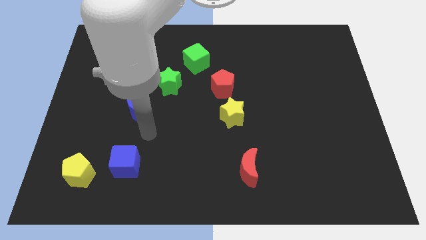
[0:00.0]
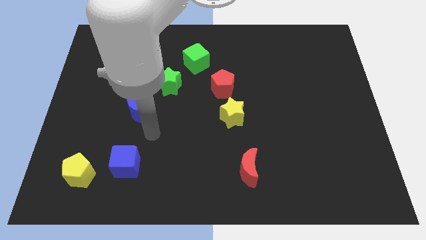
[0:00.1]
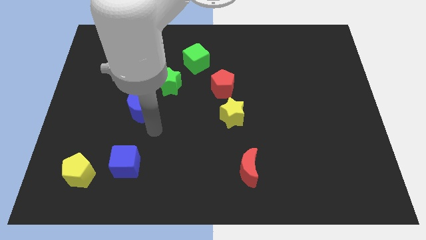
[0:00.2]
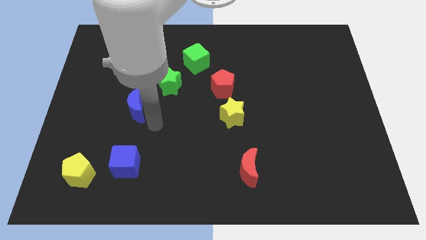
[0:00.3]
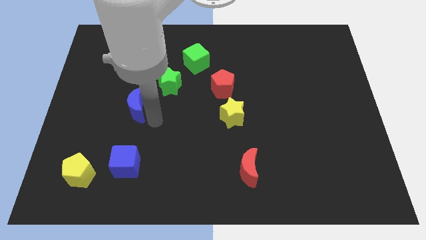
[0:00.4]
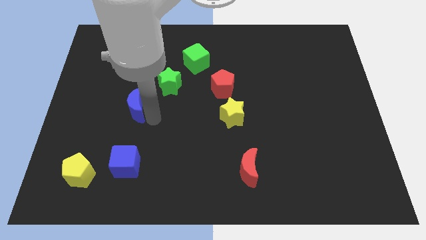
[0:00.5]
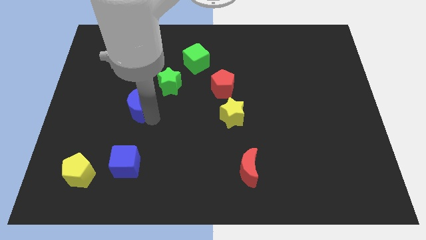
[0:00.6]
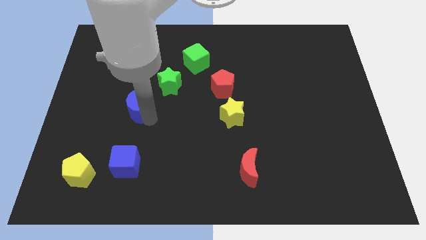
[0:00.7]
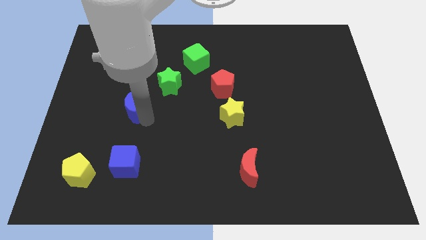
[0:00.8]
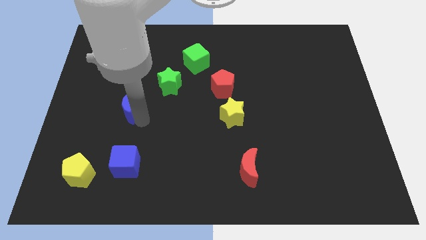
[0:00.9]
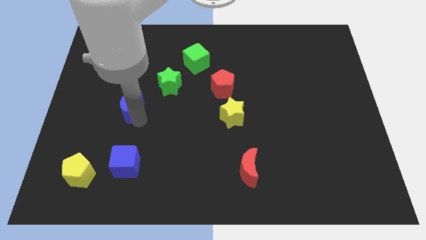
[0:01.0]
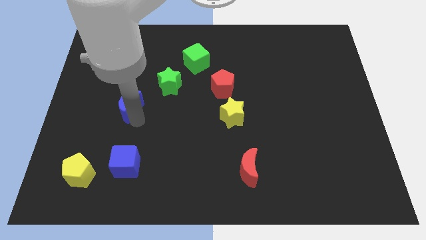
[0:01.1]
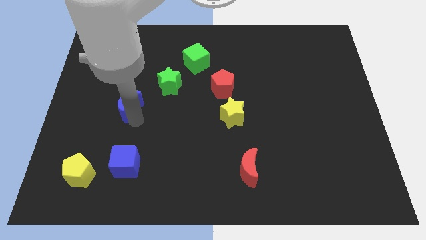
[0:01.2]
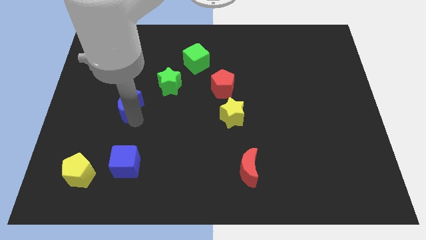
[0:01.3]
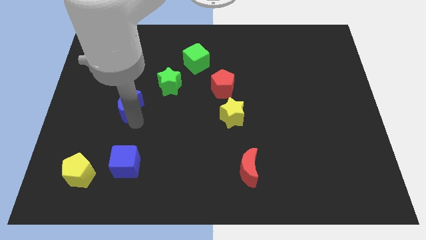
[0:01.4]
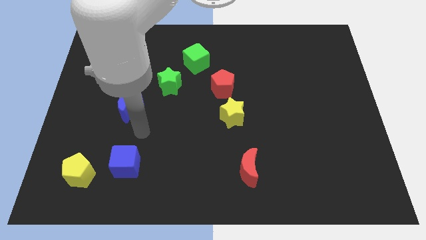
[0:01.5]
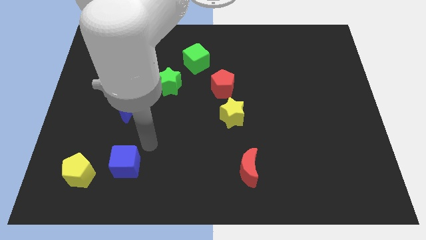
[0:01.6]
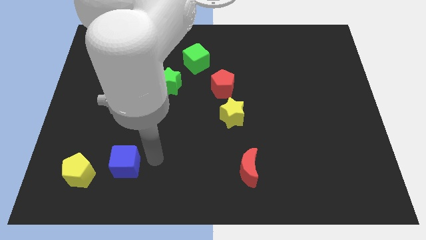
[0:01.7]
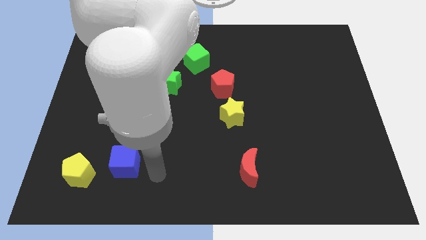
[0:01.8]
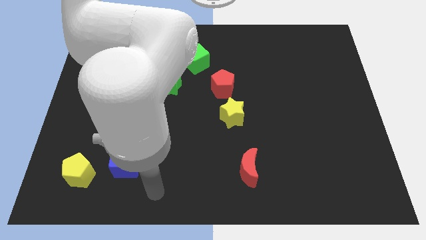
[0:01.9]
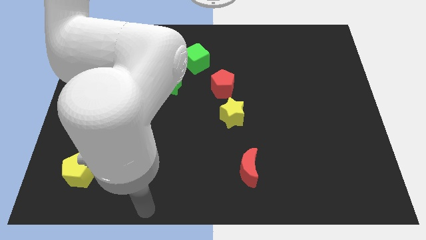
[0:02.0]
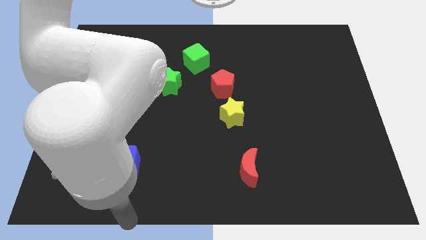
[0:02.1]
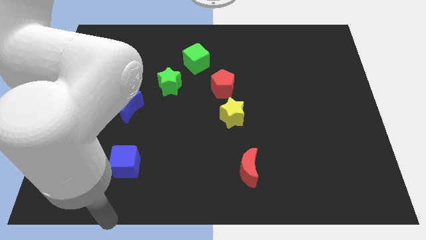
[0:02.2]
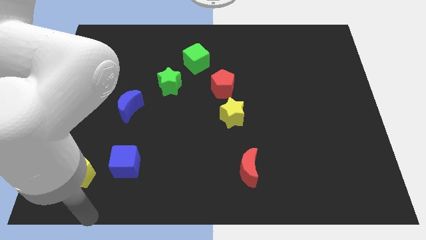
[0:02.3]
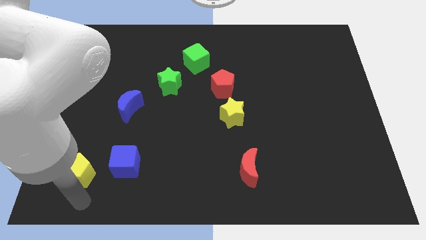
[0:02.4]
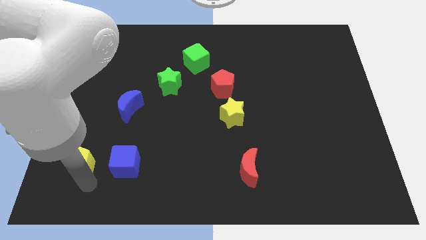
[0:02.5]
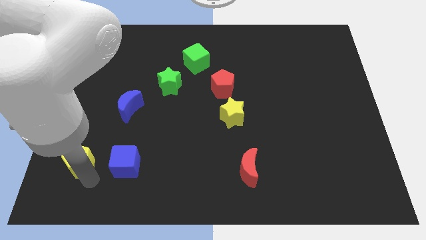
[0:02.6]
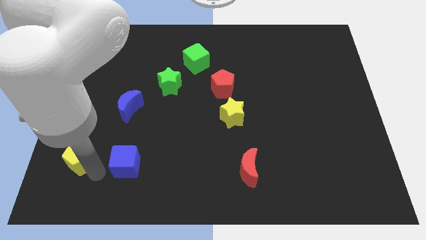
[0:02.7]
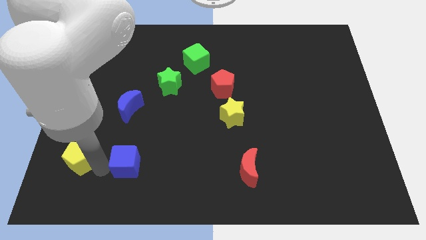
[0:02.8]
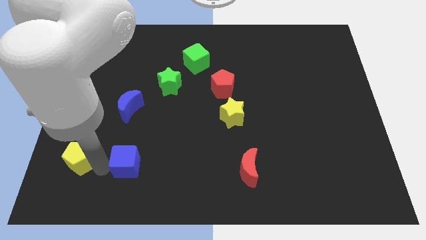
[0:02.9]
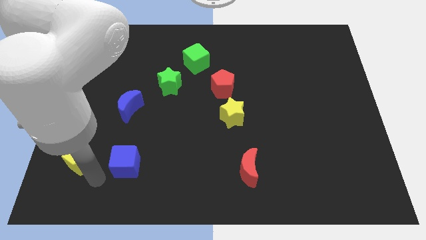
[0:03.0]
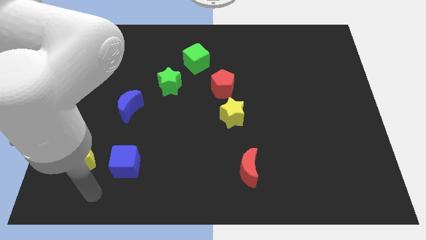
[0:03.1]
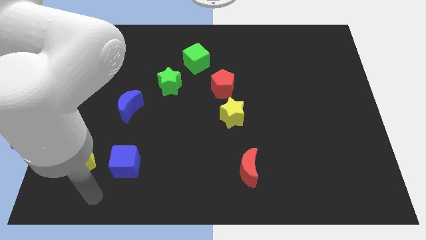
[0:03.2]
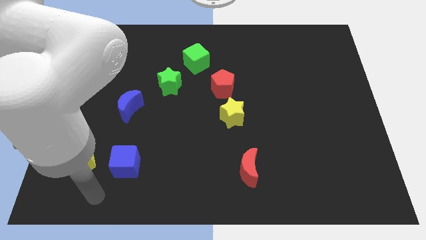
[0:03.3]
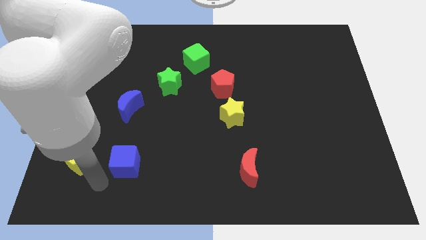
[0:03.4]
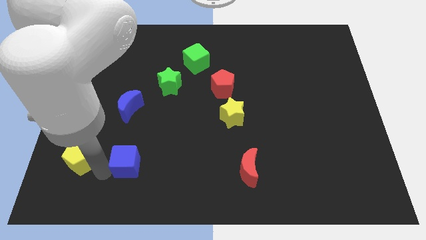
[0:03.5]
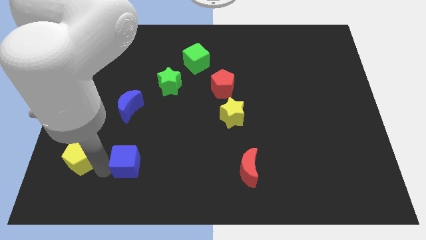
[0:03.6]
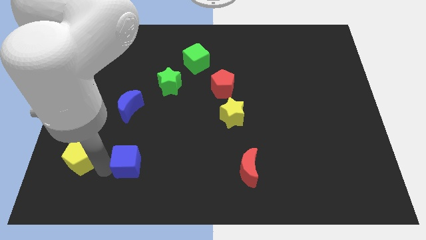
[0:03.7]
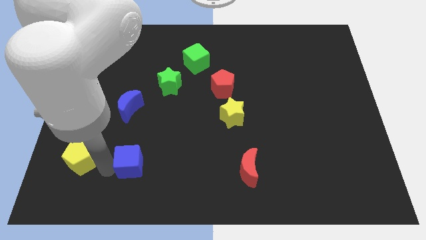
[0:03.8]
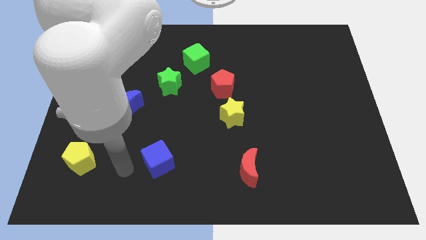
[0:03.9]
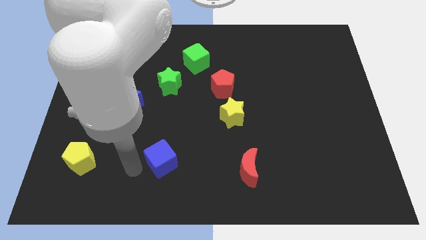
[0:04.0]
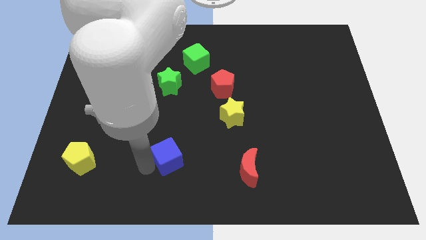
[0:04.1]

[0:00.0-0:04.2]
push blue cube below green star

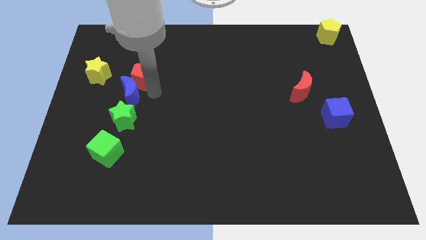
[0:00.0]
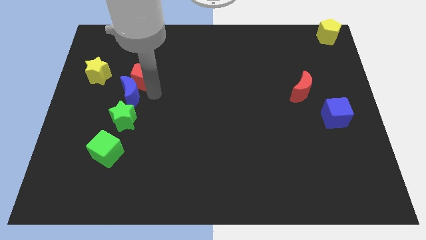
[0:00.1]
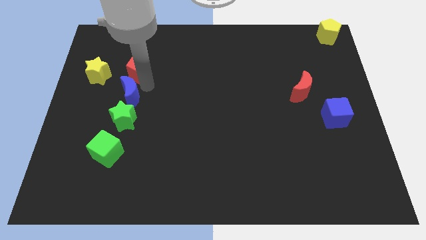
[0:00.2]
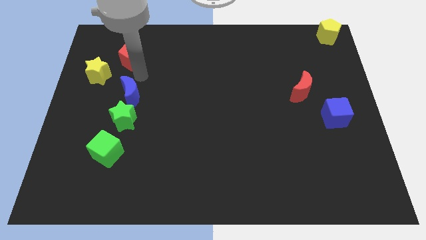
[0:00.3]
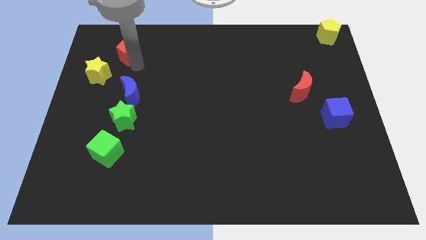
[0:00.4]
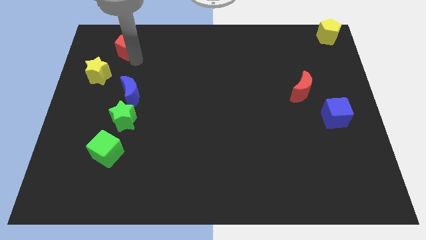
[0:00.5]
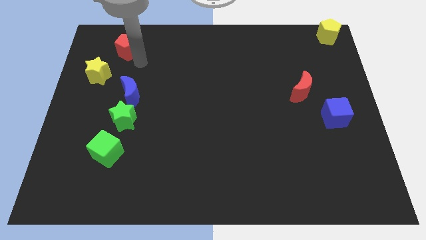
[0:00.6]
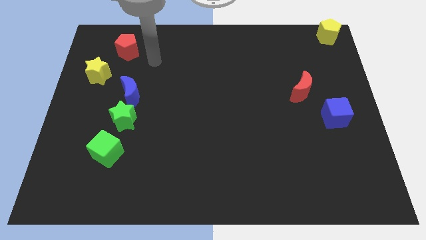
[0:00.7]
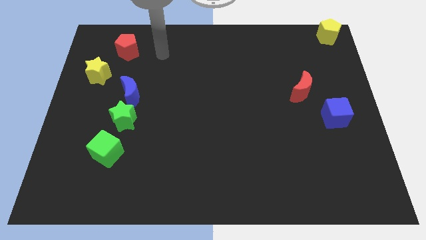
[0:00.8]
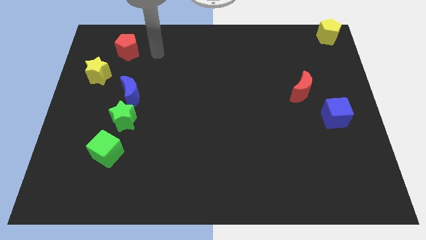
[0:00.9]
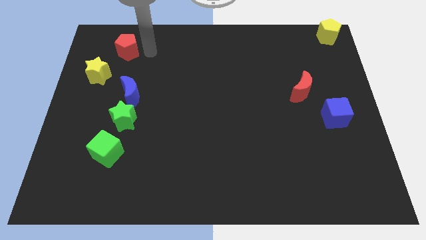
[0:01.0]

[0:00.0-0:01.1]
separate the red pentagon and blue moon

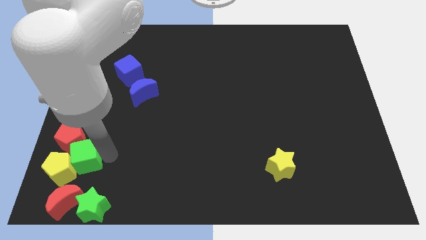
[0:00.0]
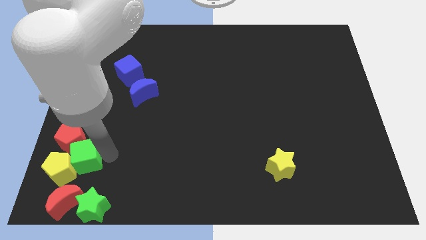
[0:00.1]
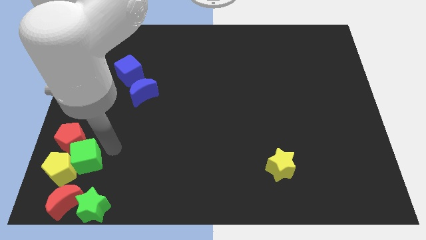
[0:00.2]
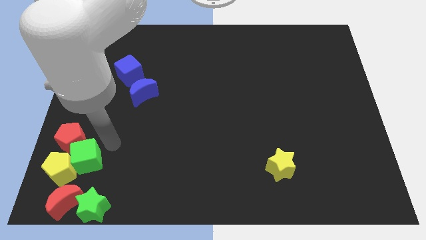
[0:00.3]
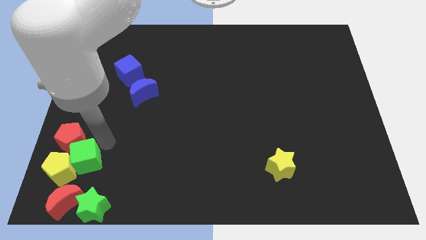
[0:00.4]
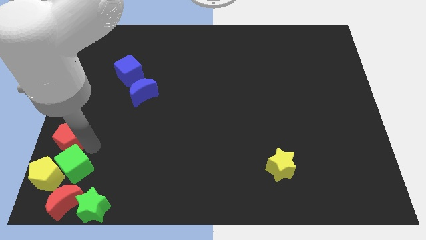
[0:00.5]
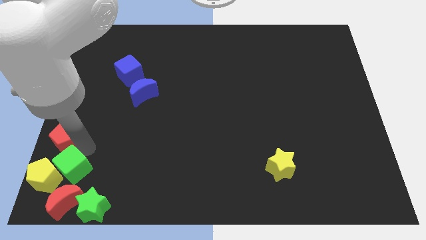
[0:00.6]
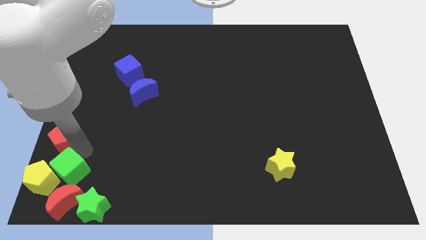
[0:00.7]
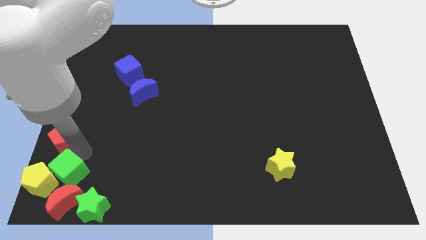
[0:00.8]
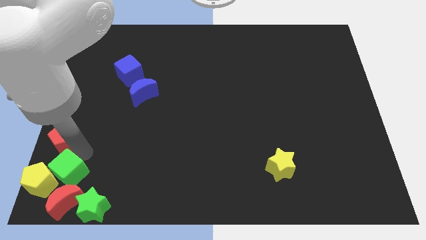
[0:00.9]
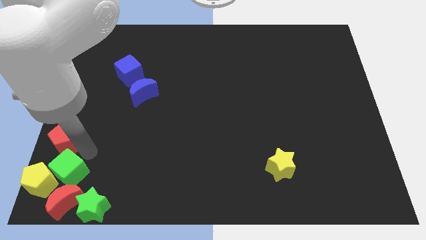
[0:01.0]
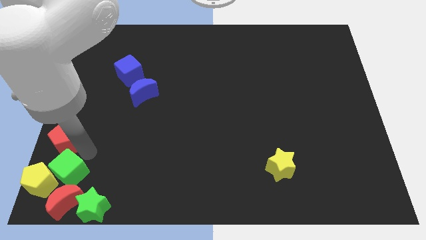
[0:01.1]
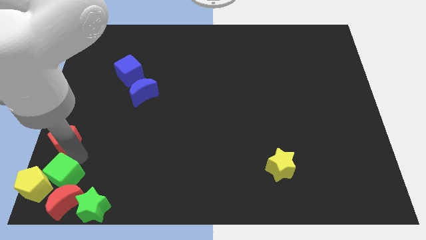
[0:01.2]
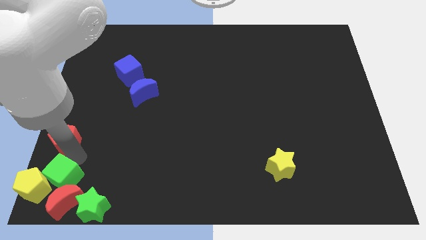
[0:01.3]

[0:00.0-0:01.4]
push green cube and yellow pentagon at bottom left

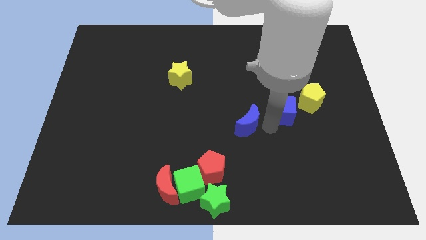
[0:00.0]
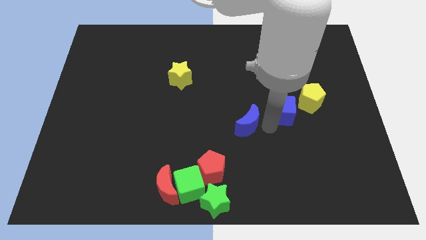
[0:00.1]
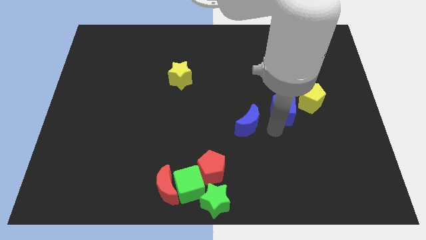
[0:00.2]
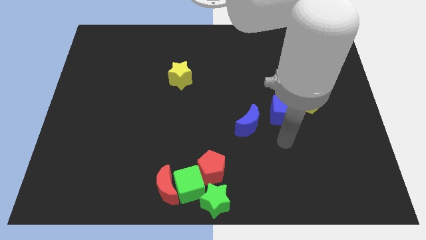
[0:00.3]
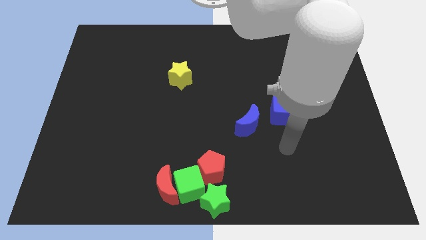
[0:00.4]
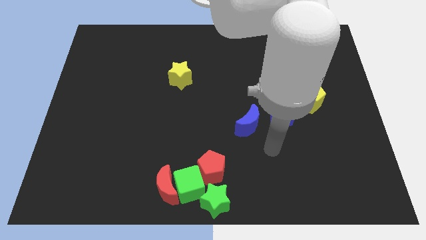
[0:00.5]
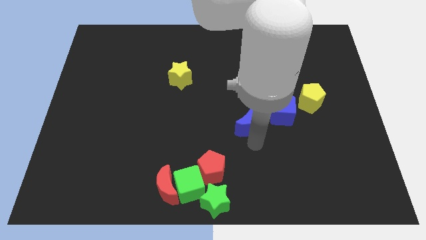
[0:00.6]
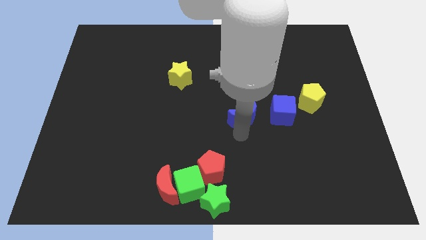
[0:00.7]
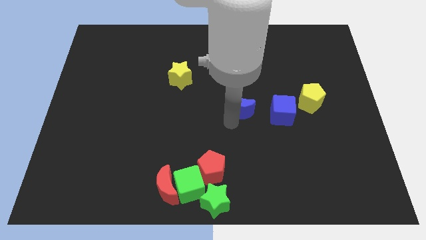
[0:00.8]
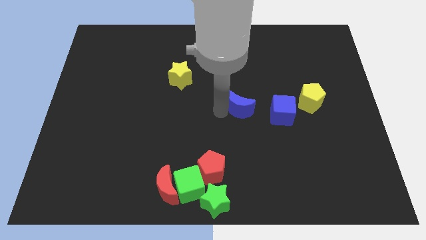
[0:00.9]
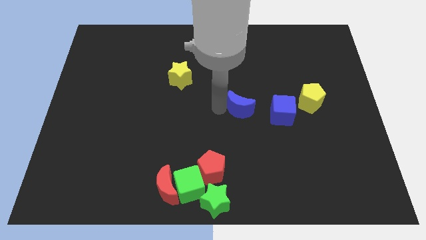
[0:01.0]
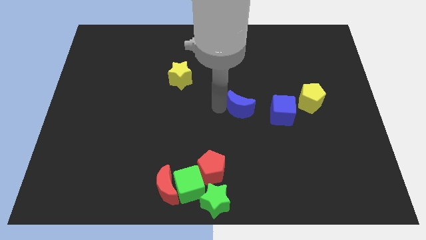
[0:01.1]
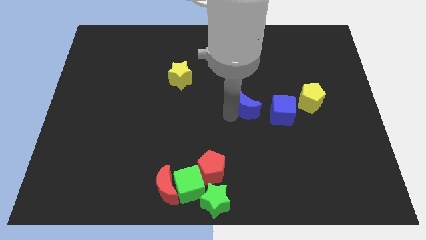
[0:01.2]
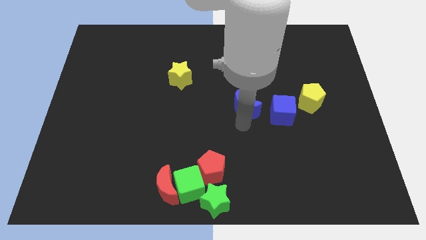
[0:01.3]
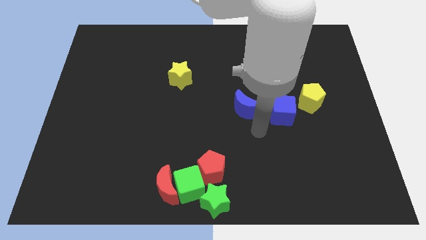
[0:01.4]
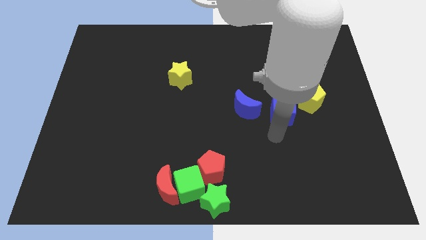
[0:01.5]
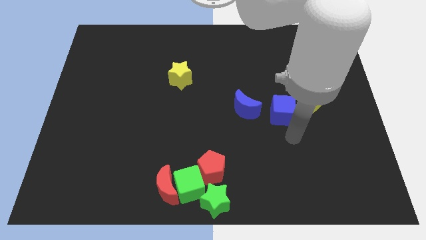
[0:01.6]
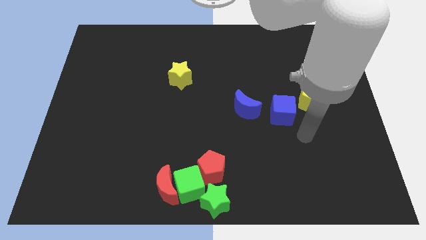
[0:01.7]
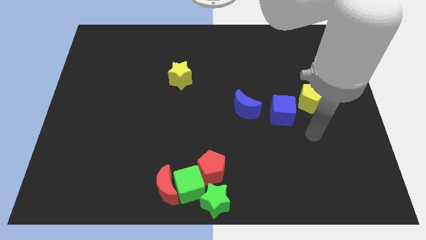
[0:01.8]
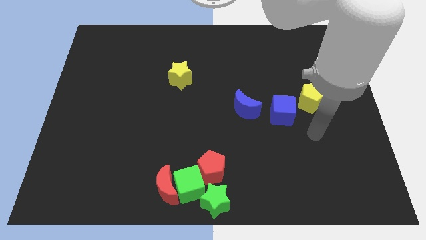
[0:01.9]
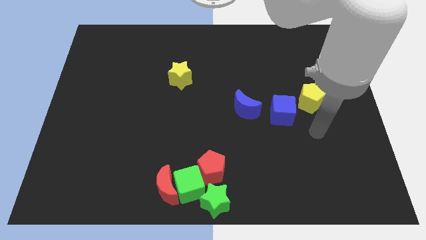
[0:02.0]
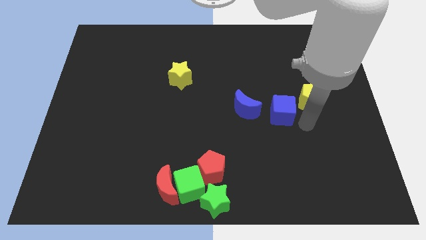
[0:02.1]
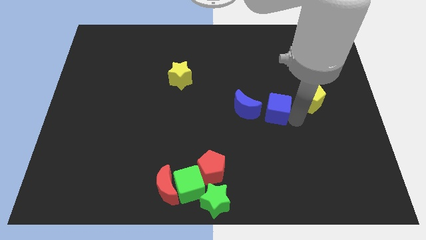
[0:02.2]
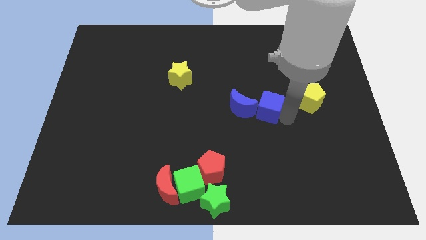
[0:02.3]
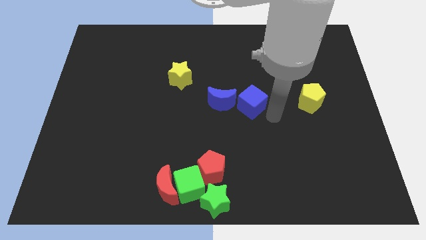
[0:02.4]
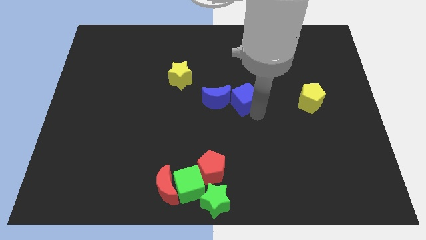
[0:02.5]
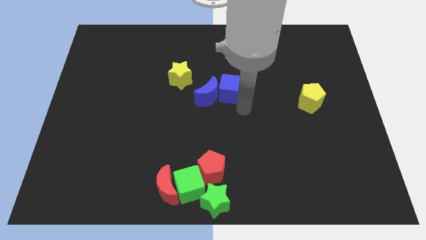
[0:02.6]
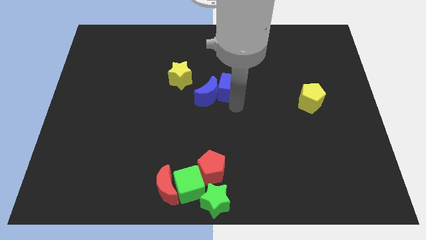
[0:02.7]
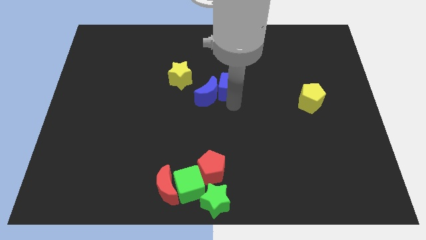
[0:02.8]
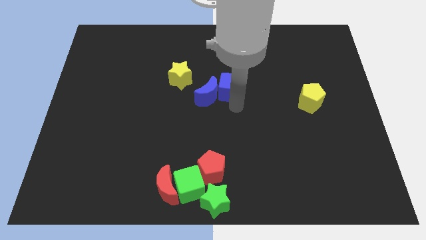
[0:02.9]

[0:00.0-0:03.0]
move the group of blue blocks towards the yellow star
